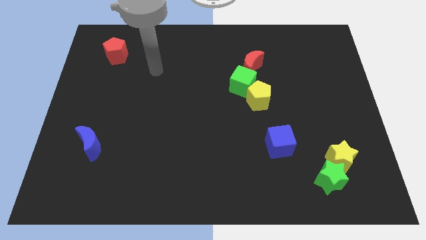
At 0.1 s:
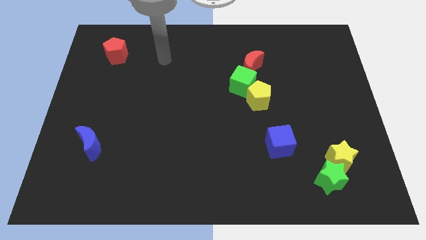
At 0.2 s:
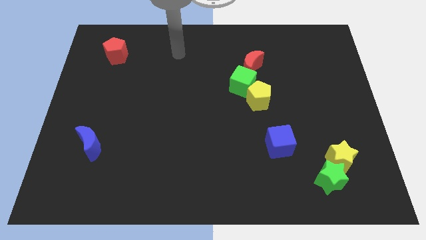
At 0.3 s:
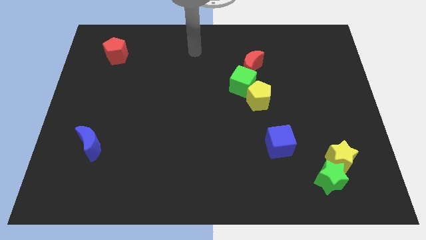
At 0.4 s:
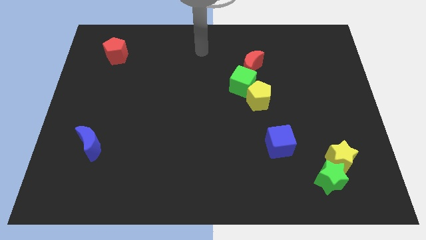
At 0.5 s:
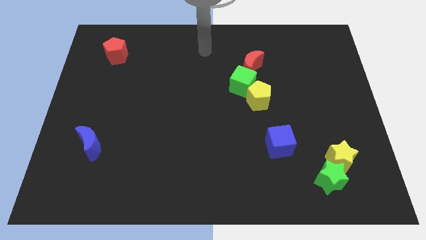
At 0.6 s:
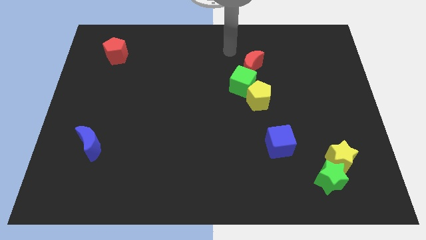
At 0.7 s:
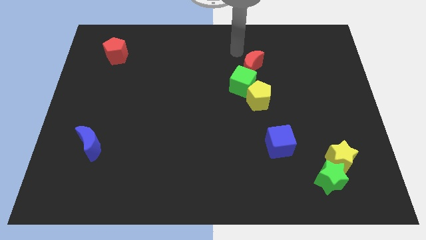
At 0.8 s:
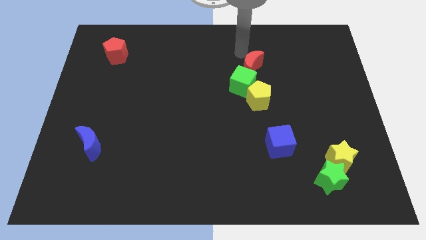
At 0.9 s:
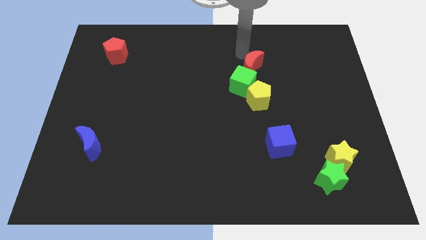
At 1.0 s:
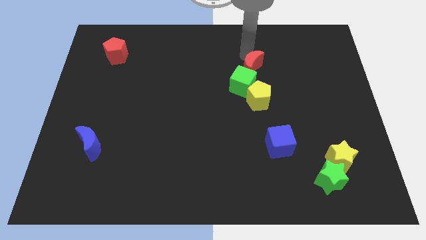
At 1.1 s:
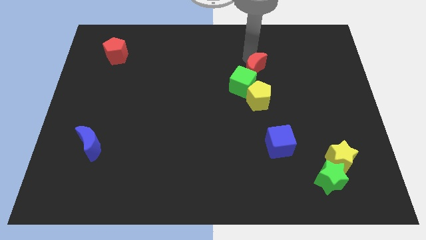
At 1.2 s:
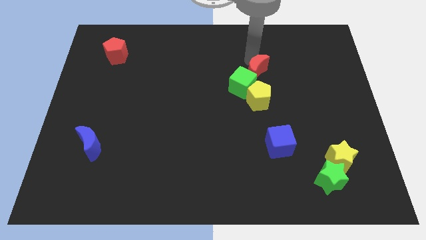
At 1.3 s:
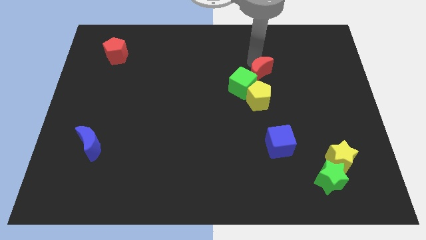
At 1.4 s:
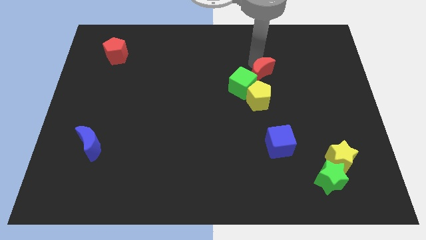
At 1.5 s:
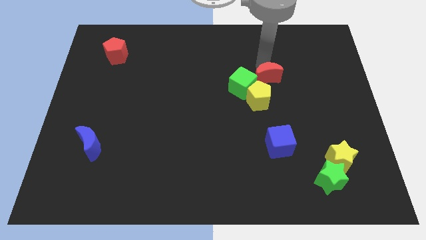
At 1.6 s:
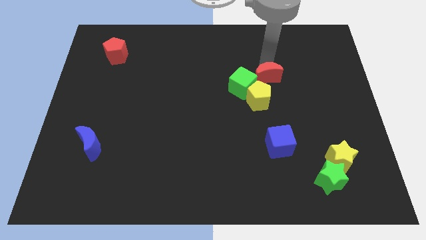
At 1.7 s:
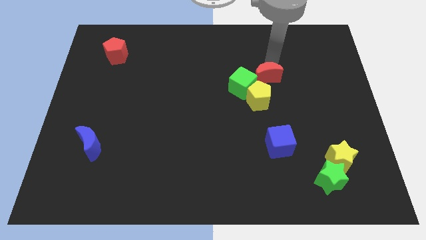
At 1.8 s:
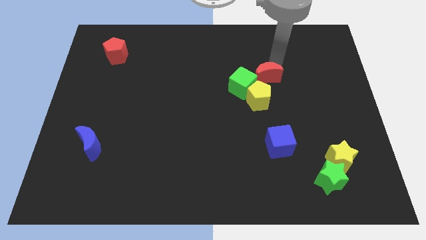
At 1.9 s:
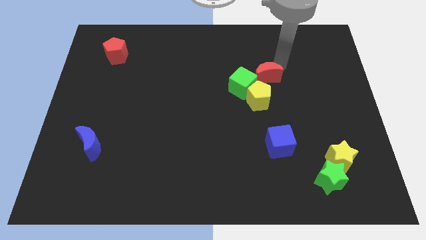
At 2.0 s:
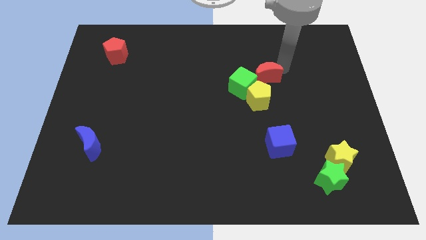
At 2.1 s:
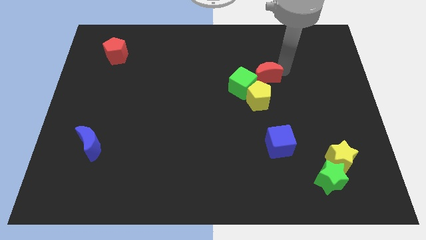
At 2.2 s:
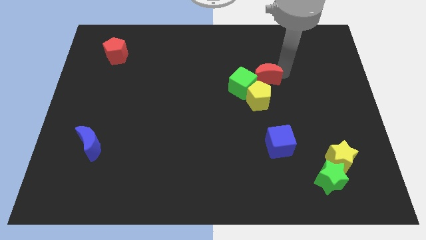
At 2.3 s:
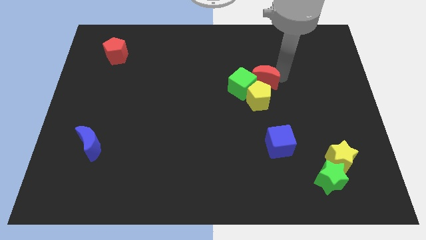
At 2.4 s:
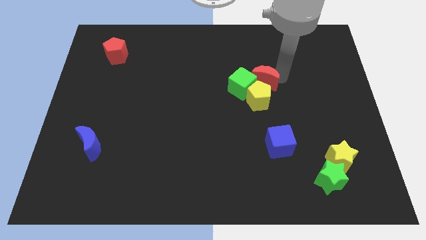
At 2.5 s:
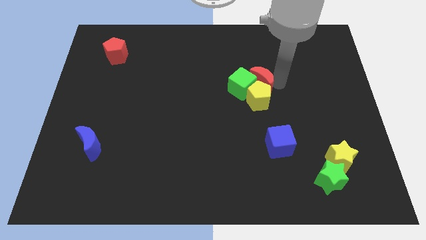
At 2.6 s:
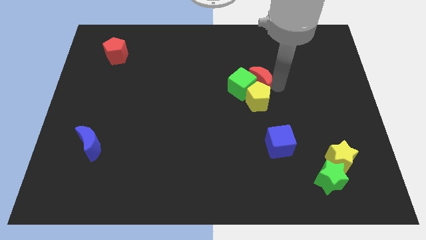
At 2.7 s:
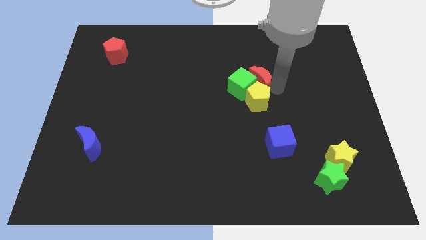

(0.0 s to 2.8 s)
move the red moon close to the yellow pentagon

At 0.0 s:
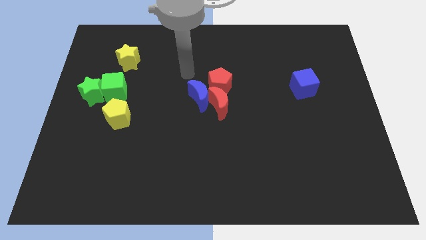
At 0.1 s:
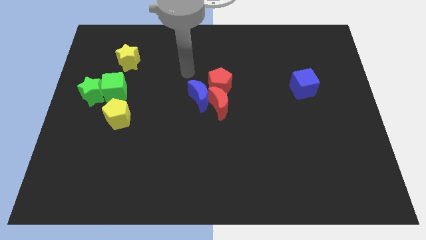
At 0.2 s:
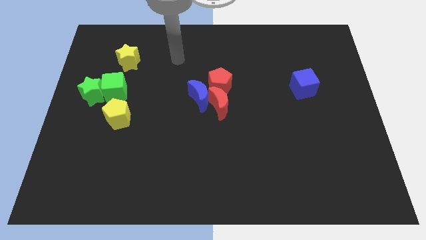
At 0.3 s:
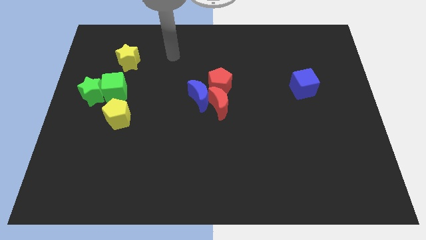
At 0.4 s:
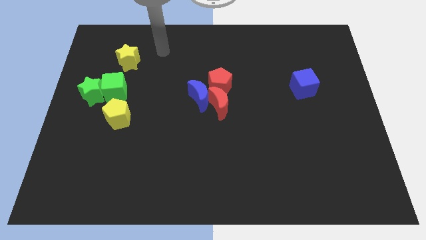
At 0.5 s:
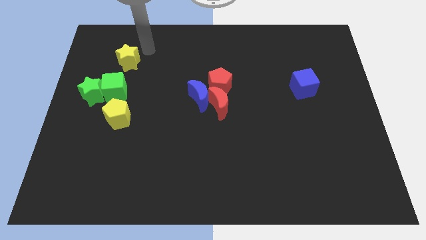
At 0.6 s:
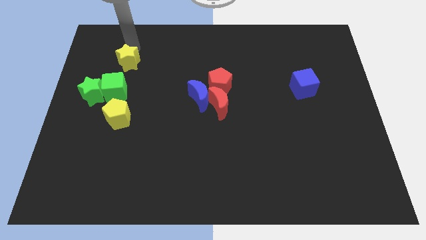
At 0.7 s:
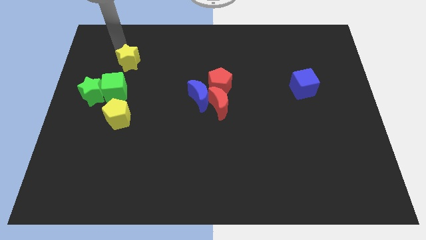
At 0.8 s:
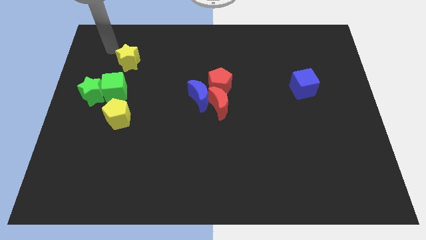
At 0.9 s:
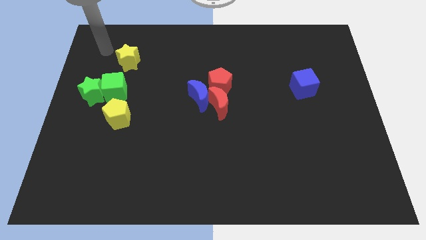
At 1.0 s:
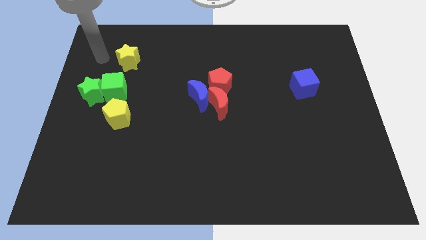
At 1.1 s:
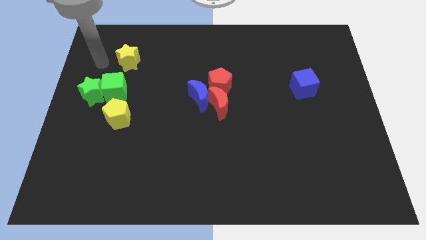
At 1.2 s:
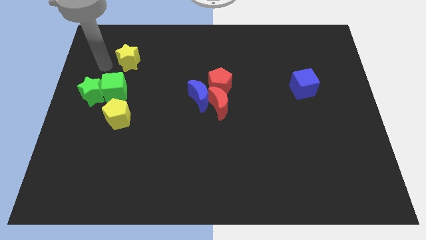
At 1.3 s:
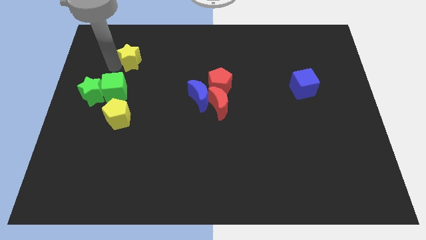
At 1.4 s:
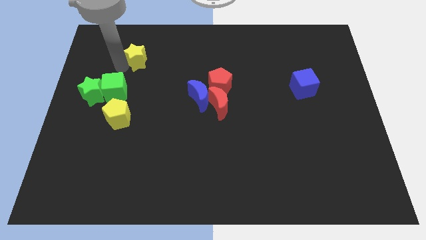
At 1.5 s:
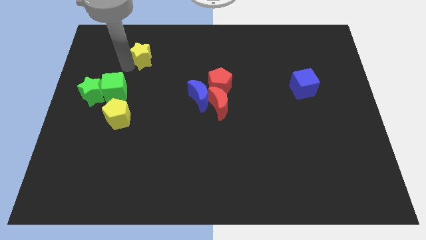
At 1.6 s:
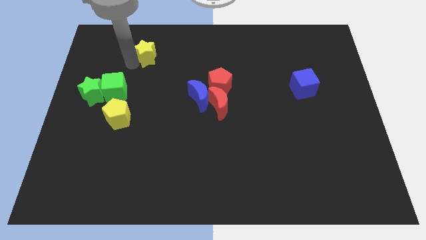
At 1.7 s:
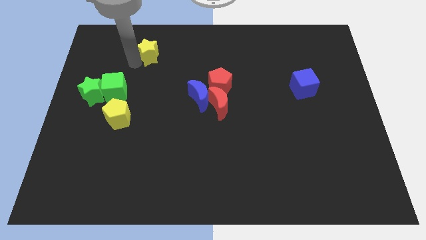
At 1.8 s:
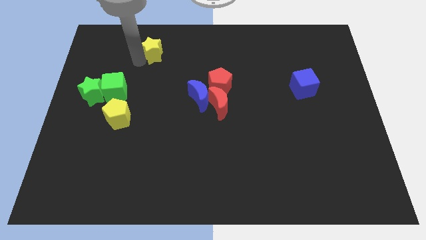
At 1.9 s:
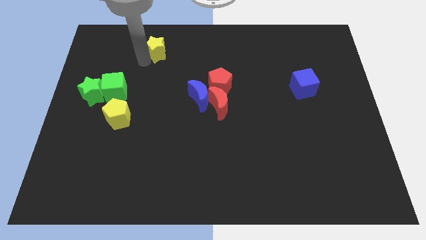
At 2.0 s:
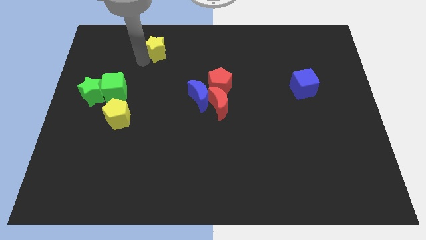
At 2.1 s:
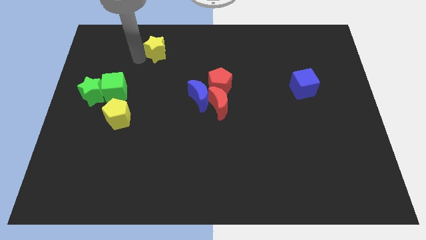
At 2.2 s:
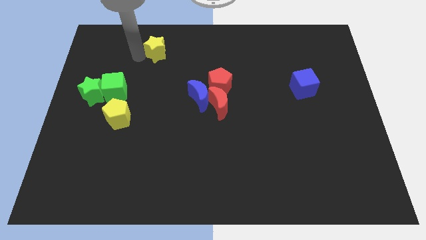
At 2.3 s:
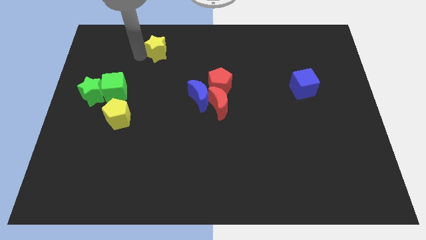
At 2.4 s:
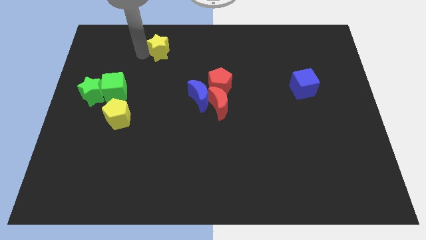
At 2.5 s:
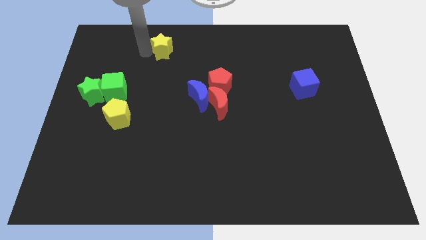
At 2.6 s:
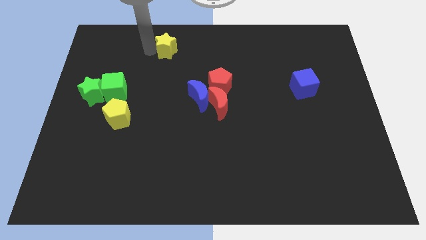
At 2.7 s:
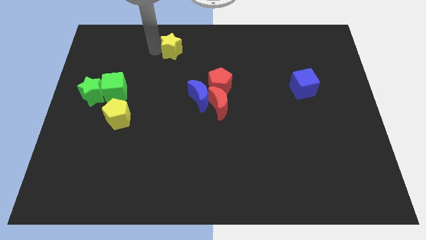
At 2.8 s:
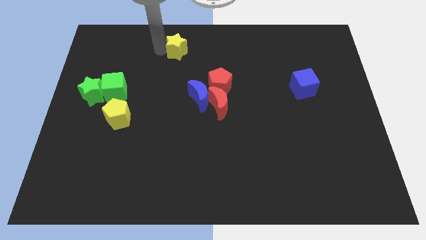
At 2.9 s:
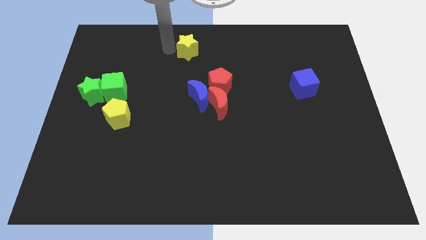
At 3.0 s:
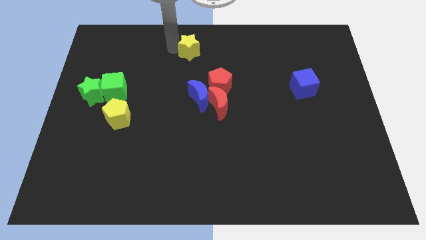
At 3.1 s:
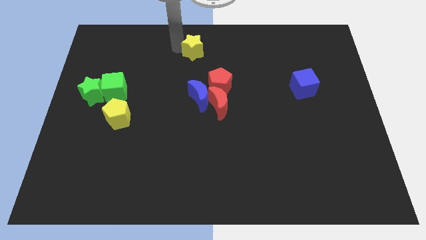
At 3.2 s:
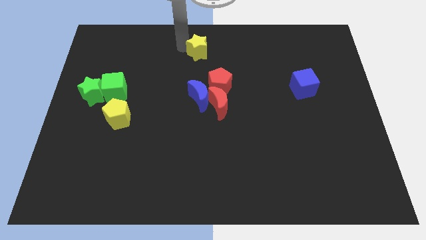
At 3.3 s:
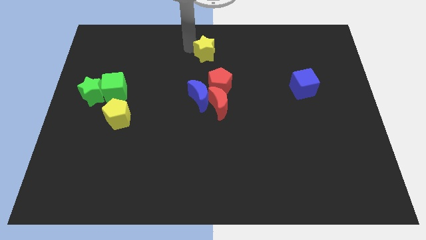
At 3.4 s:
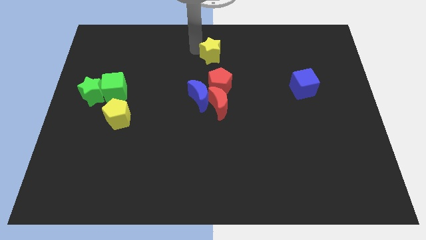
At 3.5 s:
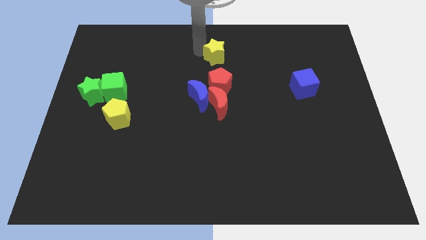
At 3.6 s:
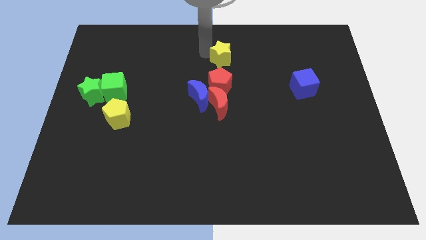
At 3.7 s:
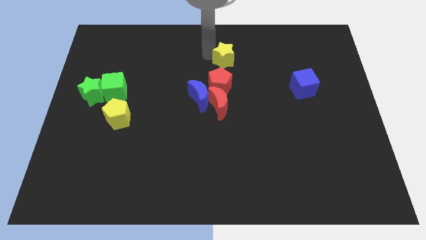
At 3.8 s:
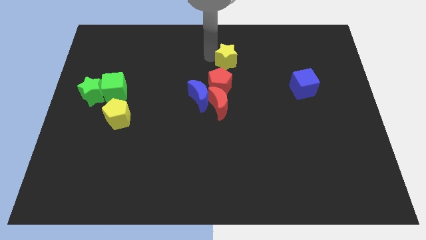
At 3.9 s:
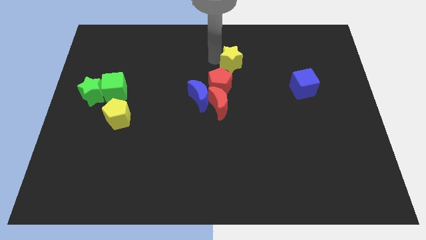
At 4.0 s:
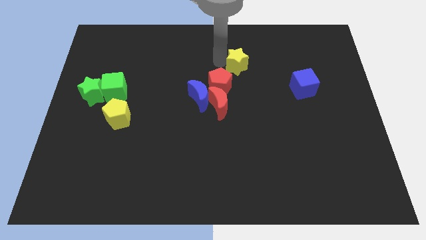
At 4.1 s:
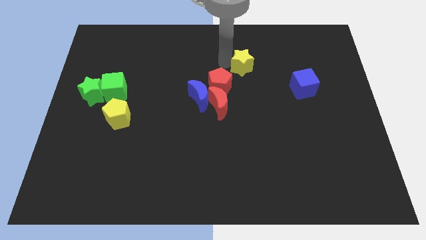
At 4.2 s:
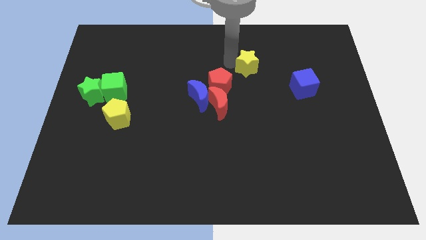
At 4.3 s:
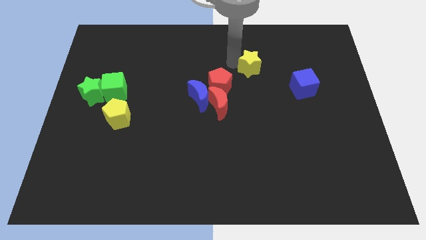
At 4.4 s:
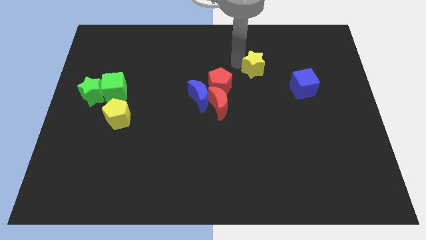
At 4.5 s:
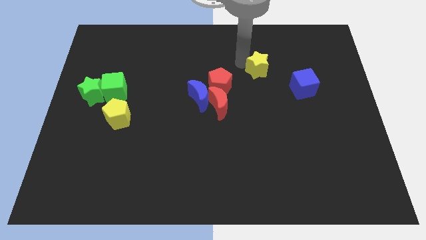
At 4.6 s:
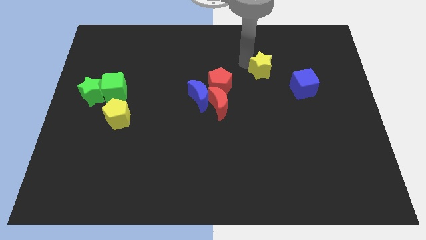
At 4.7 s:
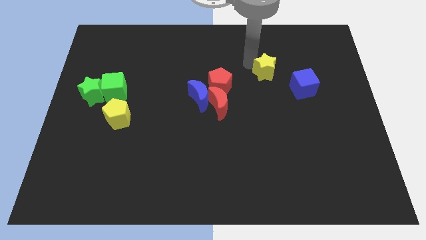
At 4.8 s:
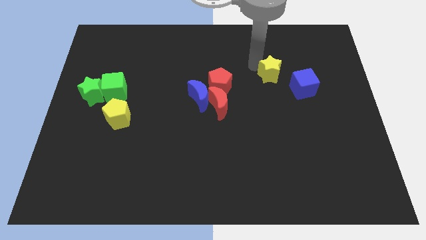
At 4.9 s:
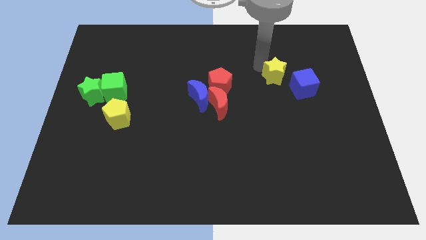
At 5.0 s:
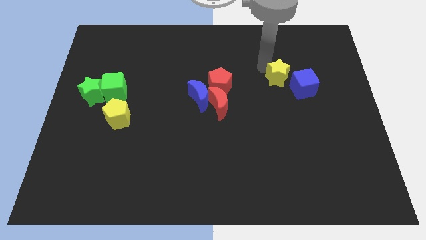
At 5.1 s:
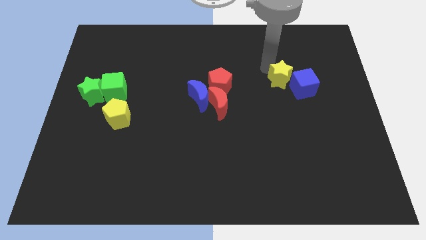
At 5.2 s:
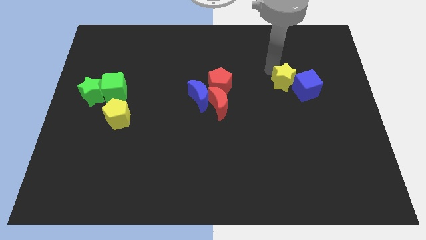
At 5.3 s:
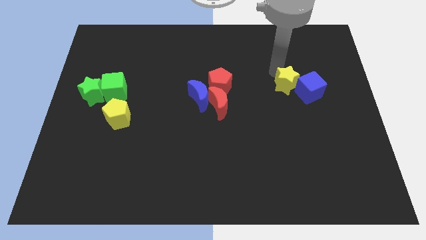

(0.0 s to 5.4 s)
slide the yellow star close to the blue cube

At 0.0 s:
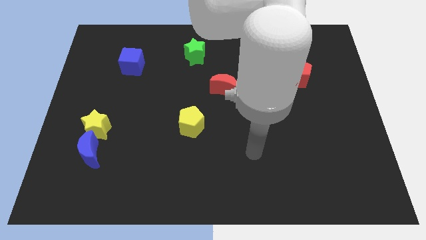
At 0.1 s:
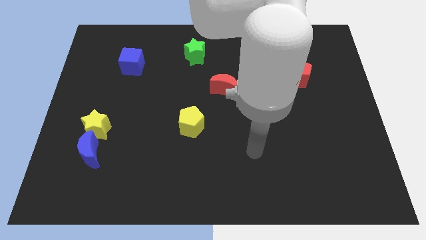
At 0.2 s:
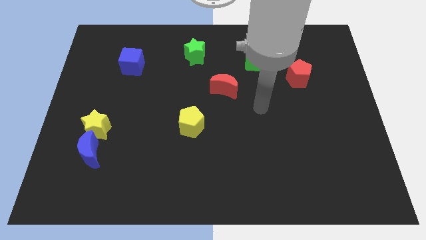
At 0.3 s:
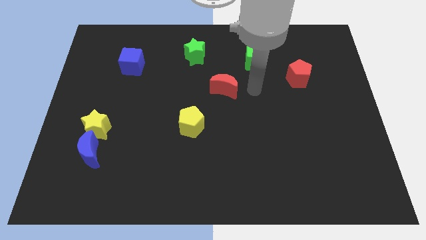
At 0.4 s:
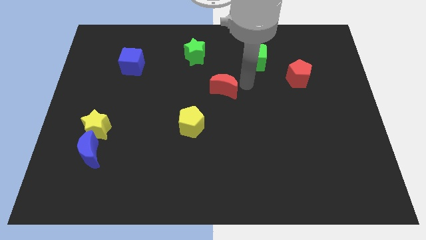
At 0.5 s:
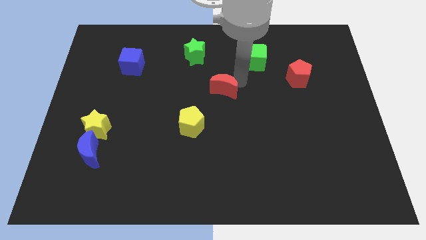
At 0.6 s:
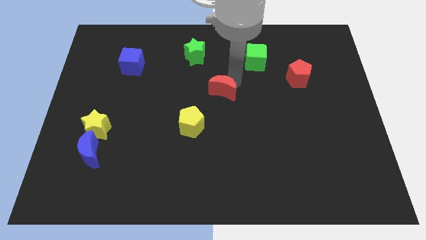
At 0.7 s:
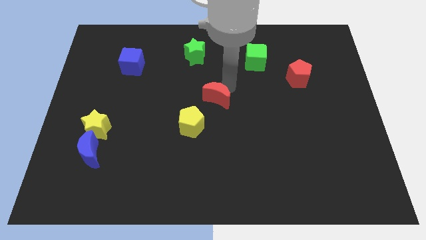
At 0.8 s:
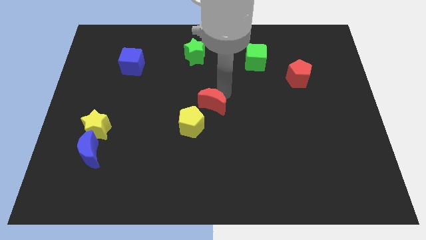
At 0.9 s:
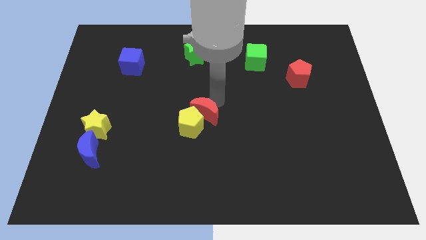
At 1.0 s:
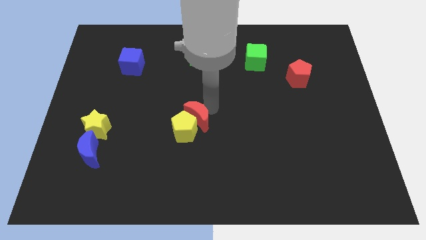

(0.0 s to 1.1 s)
slide the red moon to the yellow pentagon
